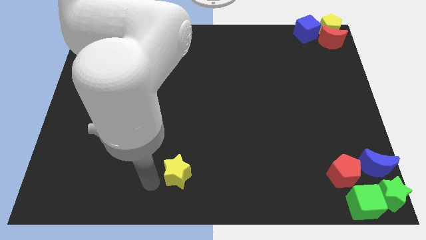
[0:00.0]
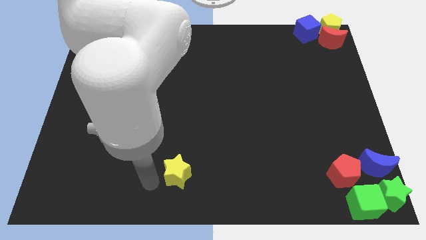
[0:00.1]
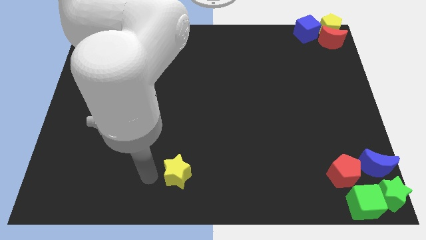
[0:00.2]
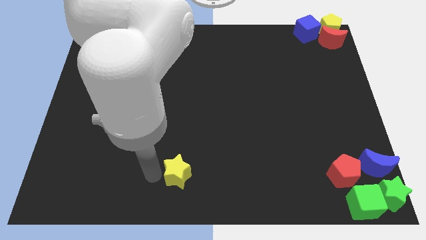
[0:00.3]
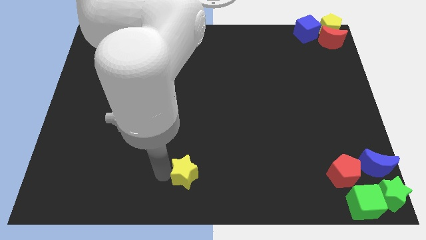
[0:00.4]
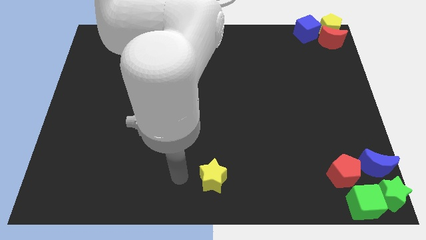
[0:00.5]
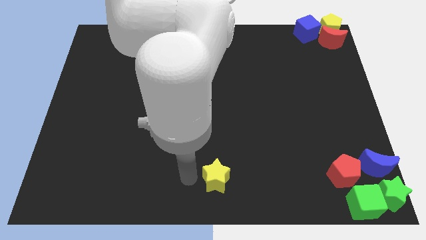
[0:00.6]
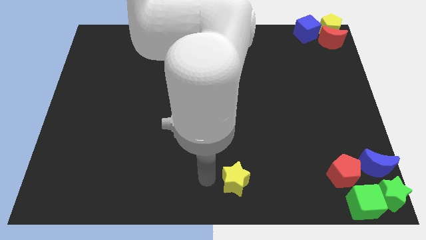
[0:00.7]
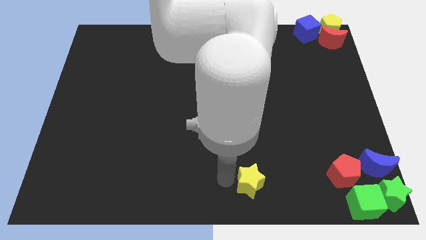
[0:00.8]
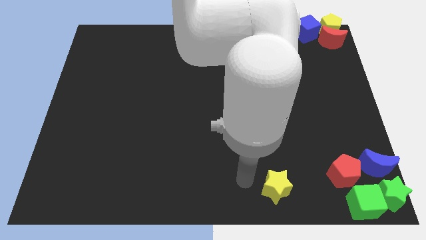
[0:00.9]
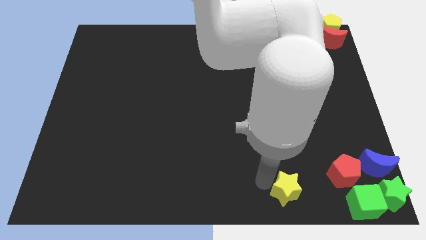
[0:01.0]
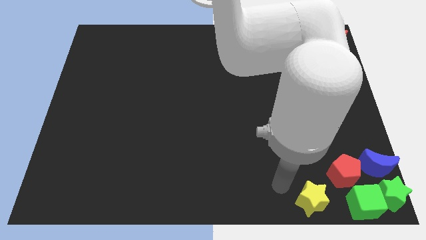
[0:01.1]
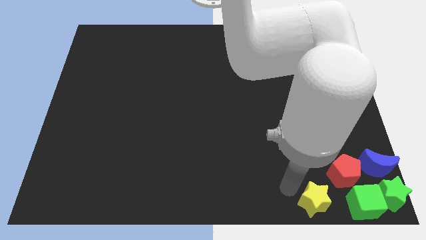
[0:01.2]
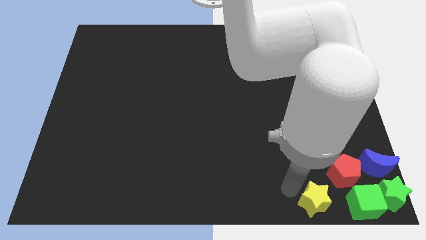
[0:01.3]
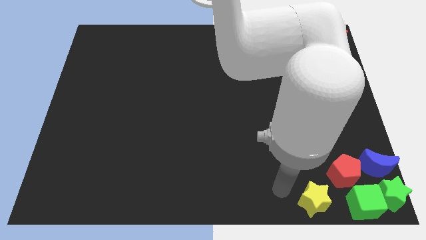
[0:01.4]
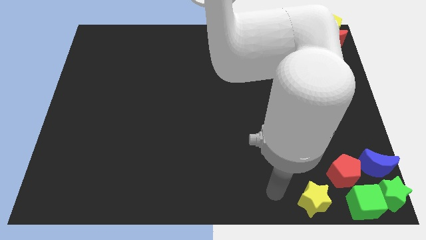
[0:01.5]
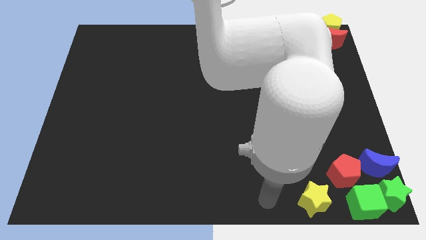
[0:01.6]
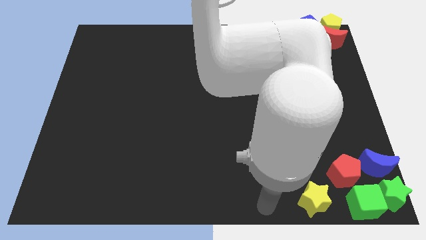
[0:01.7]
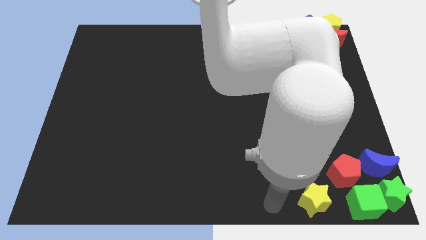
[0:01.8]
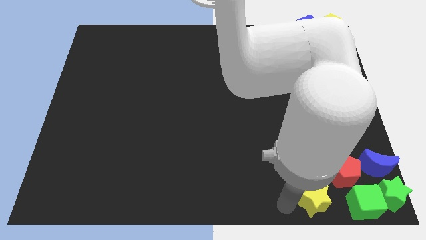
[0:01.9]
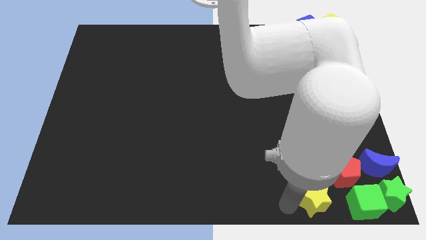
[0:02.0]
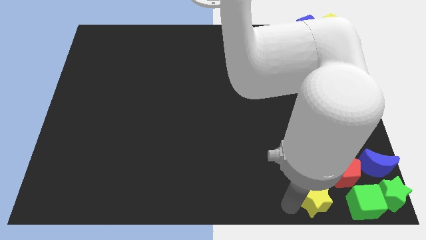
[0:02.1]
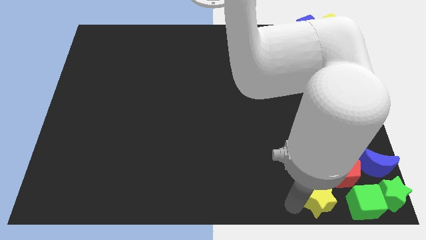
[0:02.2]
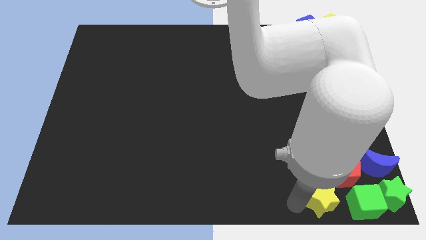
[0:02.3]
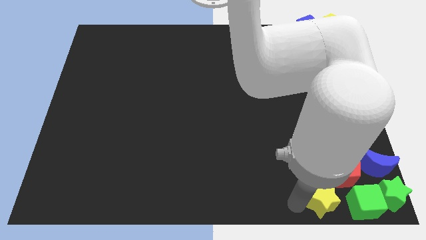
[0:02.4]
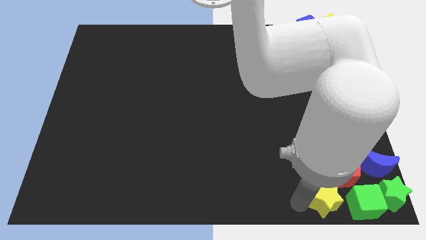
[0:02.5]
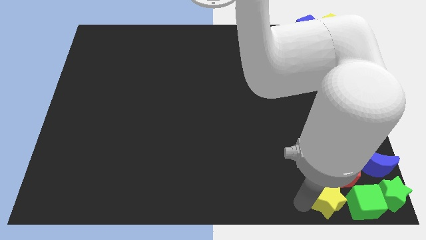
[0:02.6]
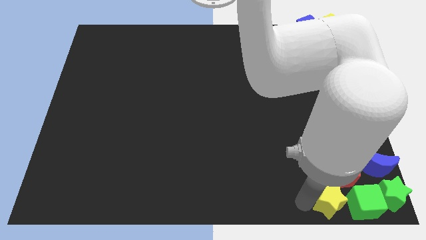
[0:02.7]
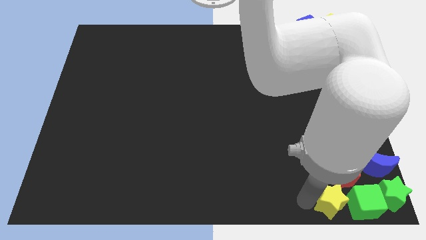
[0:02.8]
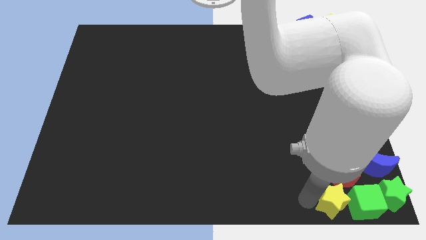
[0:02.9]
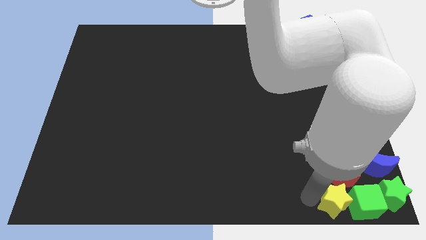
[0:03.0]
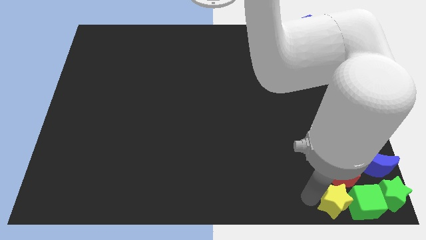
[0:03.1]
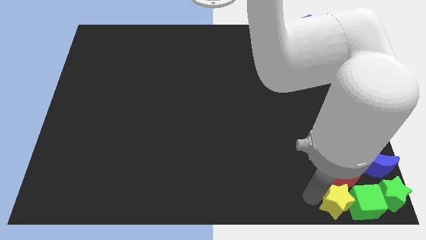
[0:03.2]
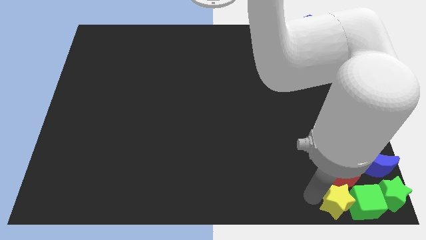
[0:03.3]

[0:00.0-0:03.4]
push the yellow star near to the left side of the green cube

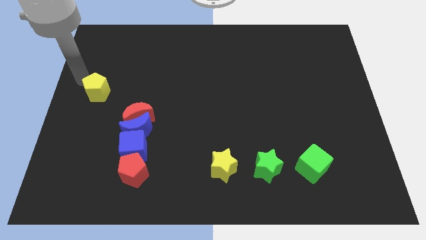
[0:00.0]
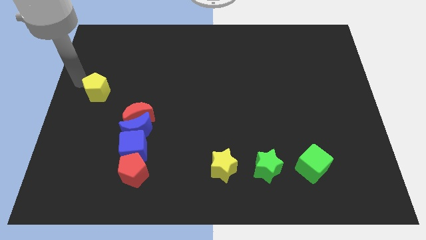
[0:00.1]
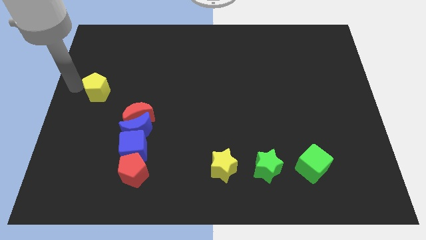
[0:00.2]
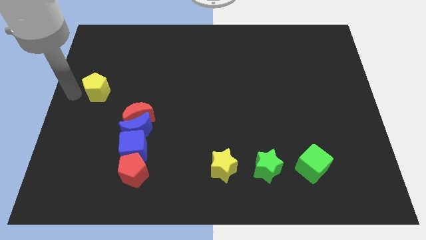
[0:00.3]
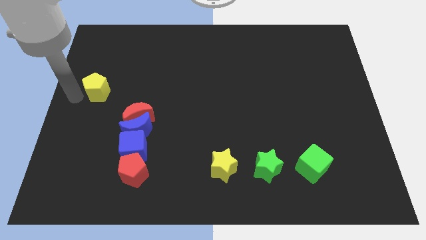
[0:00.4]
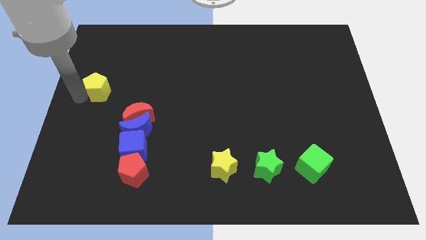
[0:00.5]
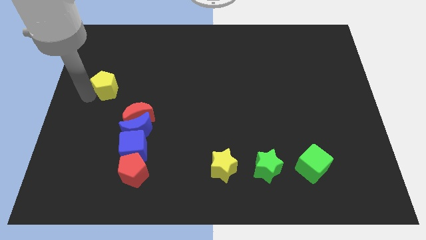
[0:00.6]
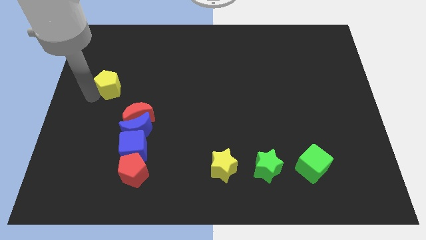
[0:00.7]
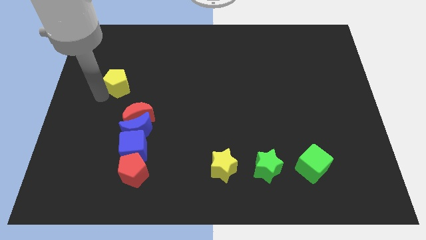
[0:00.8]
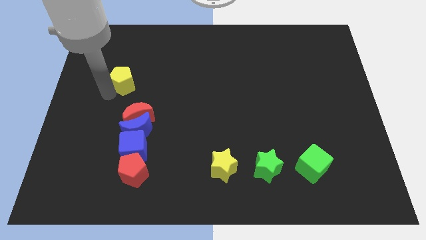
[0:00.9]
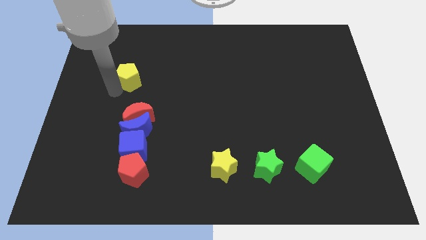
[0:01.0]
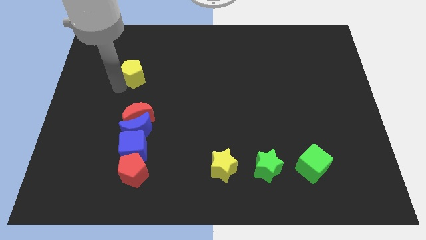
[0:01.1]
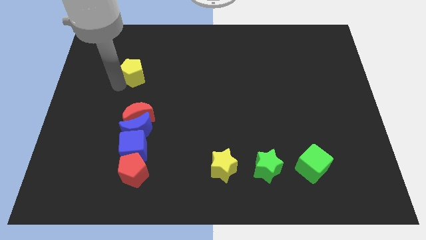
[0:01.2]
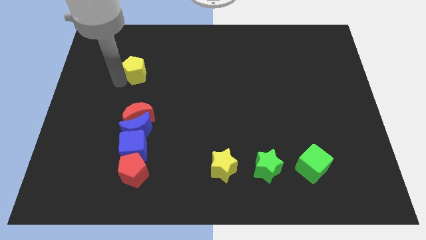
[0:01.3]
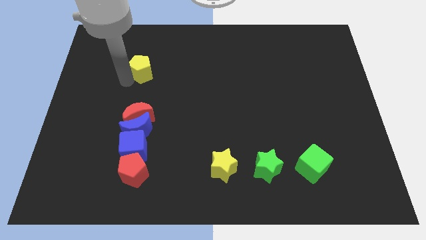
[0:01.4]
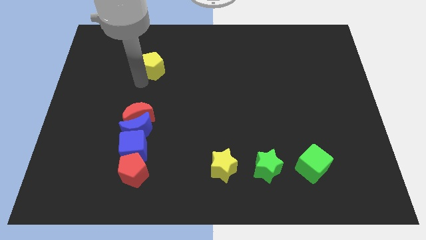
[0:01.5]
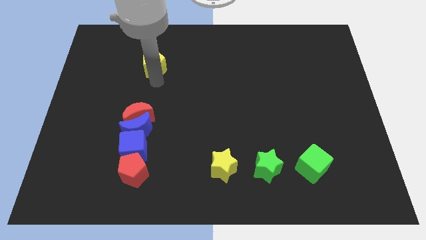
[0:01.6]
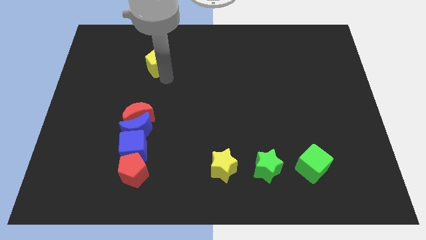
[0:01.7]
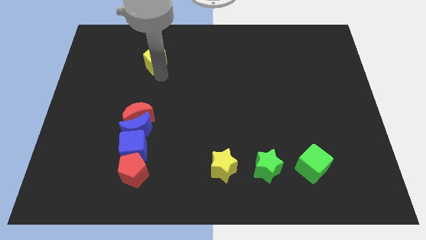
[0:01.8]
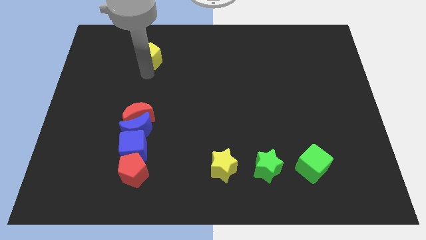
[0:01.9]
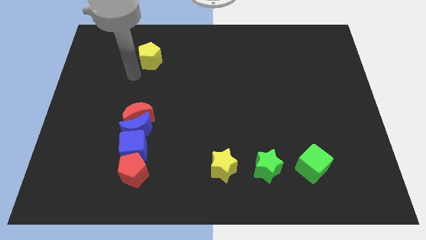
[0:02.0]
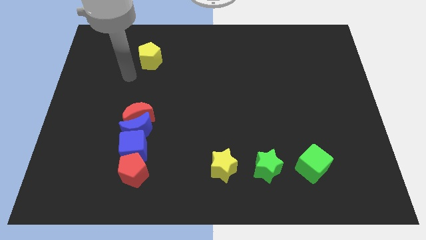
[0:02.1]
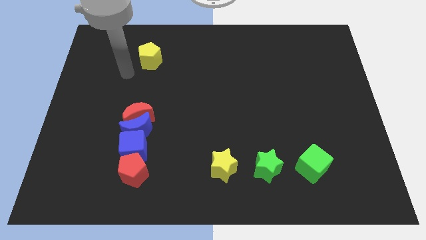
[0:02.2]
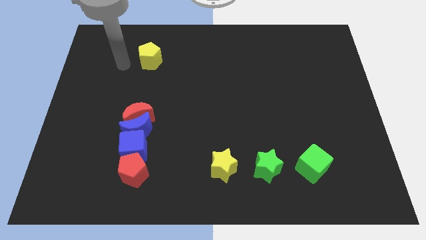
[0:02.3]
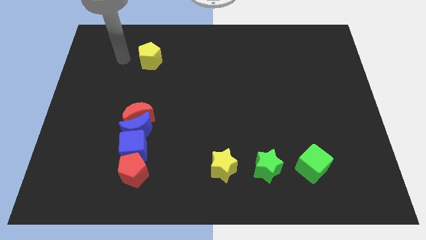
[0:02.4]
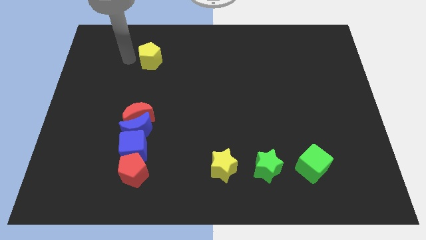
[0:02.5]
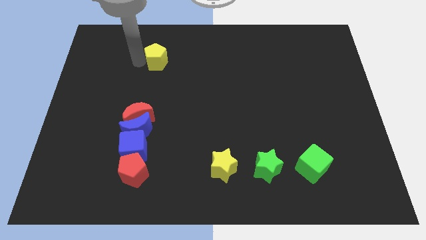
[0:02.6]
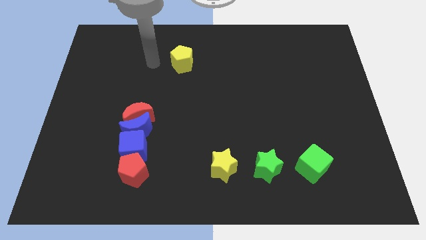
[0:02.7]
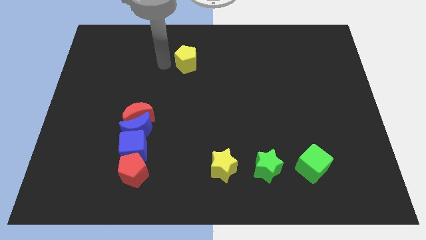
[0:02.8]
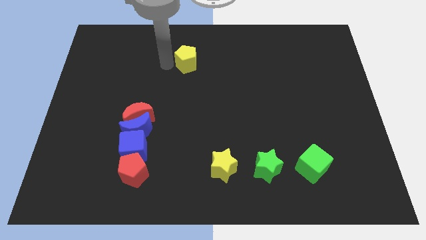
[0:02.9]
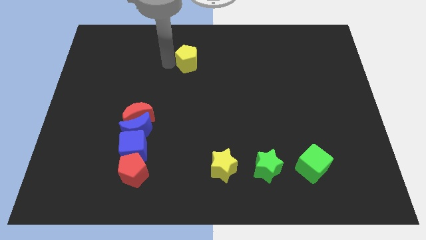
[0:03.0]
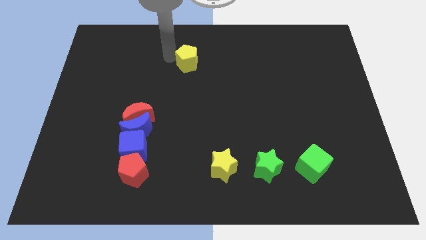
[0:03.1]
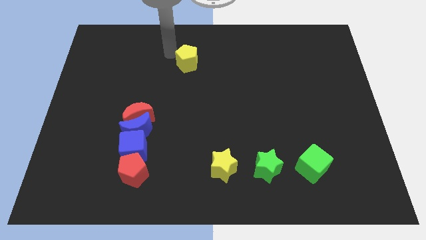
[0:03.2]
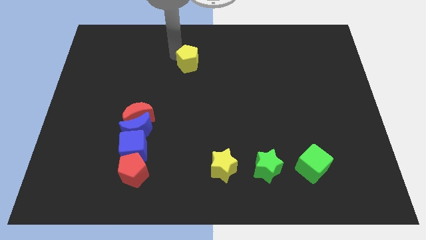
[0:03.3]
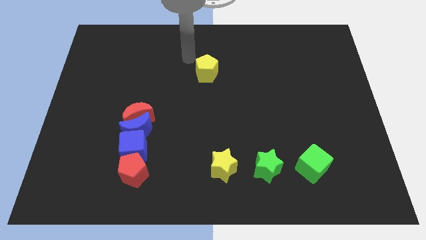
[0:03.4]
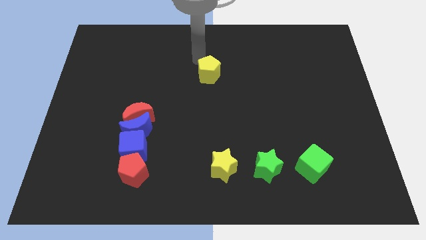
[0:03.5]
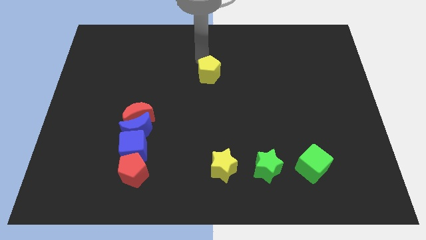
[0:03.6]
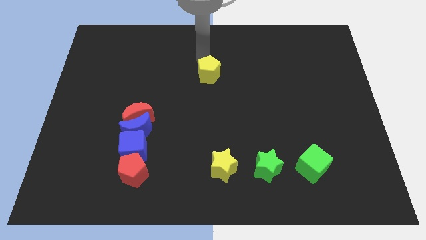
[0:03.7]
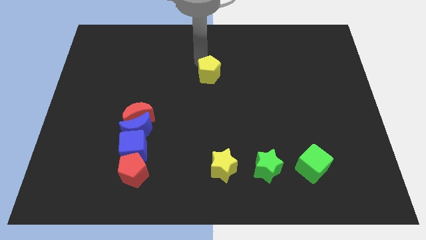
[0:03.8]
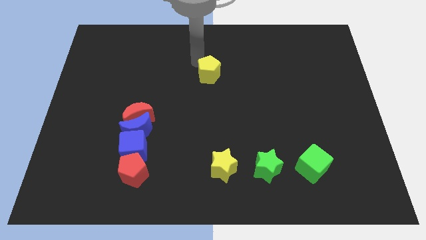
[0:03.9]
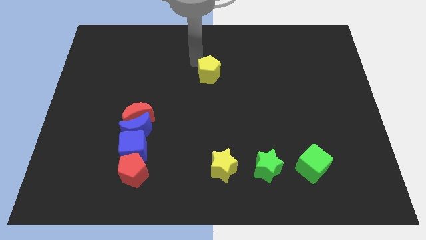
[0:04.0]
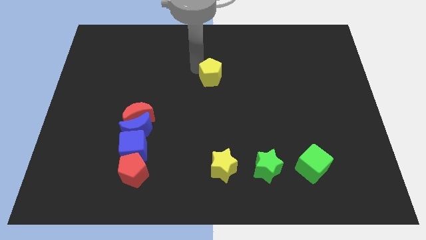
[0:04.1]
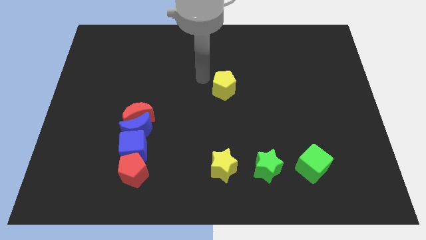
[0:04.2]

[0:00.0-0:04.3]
place the yellow pentagon vertically at the top side of the yellow star

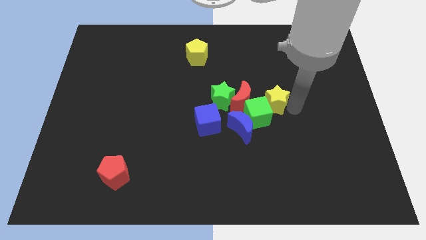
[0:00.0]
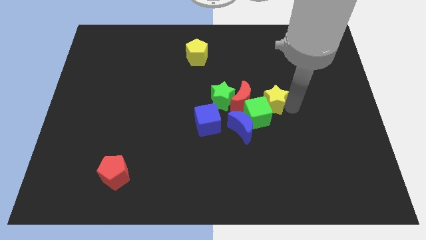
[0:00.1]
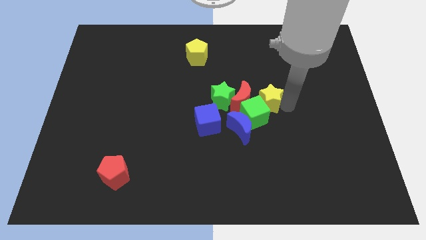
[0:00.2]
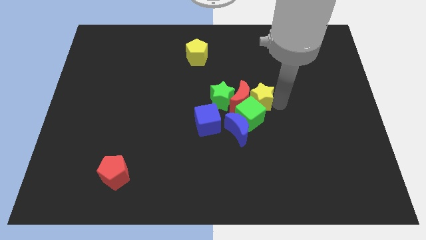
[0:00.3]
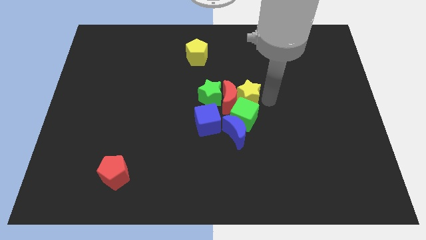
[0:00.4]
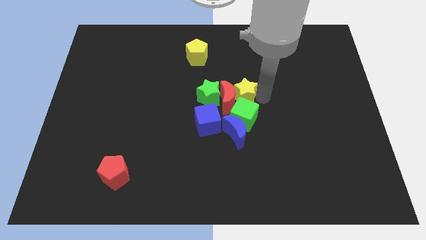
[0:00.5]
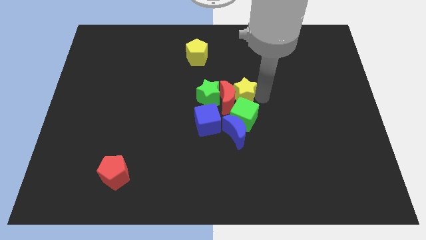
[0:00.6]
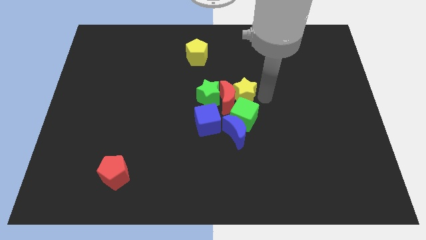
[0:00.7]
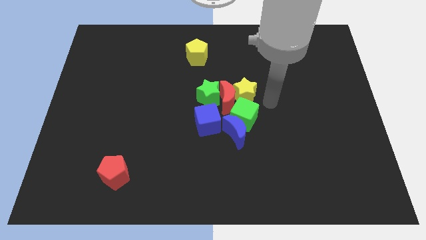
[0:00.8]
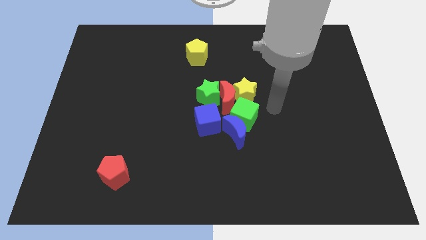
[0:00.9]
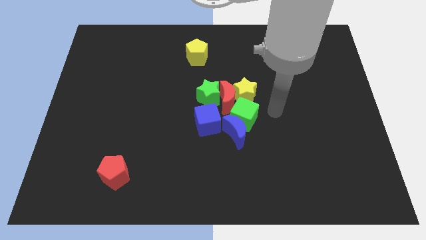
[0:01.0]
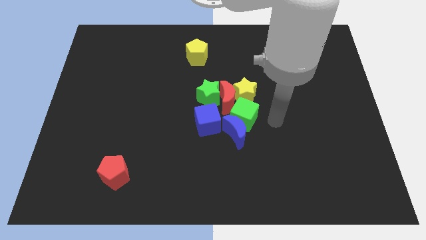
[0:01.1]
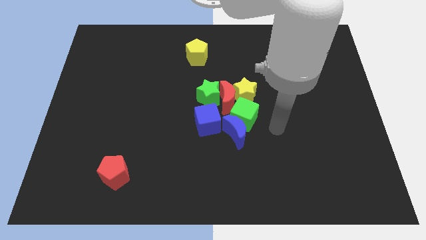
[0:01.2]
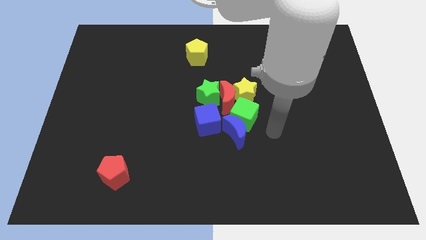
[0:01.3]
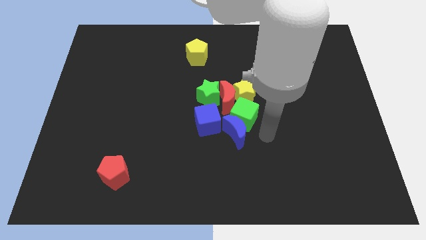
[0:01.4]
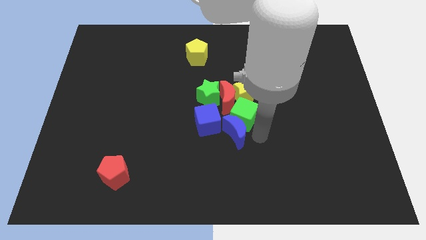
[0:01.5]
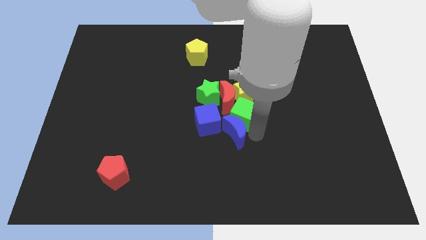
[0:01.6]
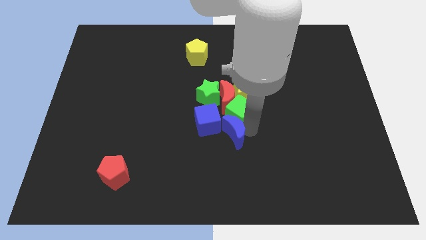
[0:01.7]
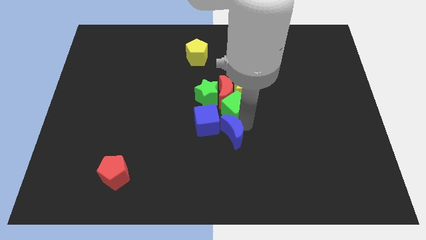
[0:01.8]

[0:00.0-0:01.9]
make a group of blocks except yellow pentagon and red pentagon
